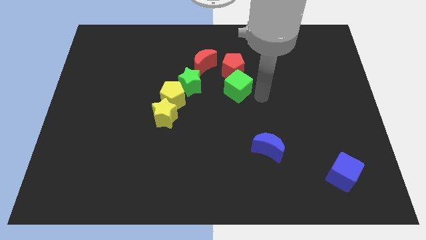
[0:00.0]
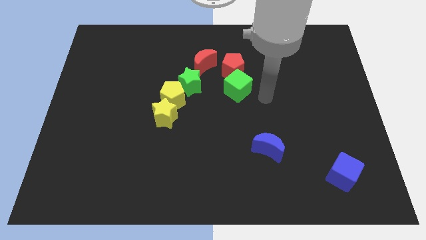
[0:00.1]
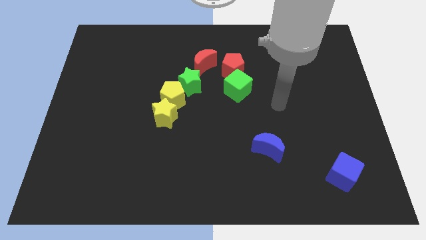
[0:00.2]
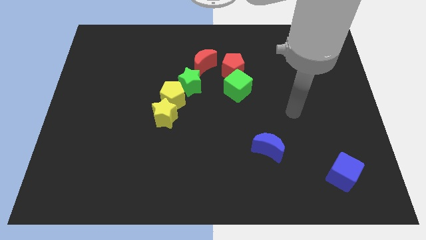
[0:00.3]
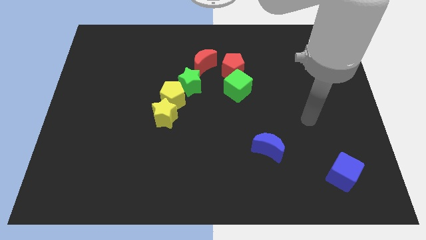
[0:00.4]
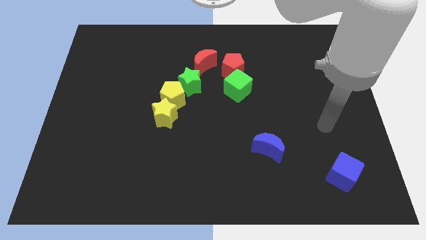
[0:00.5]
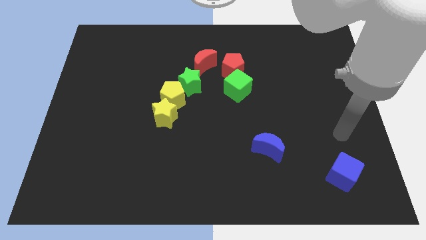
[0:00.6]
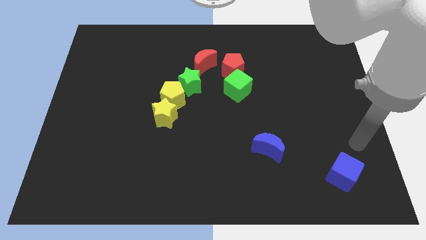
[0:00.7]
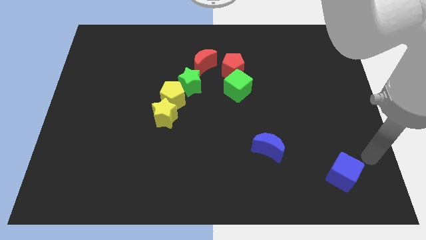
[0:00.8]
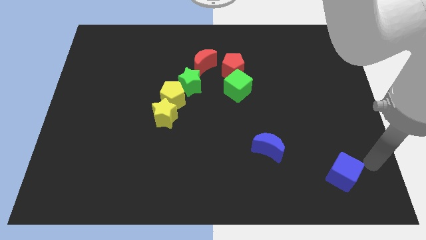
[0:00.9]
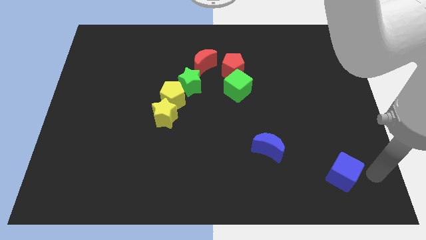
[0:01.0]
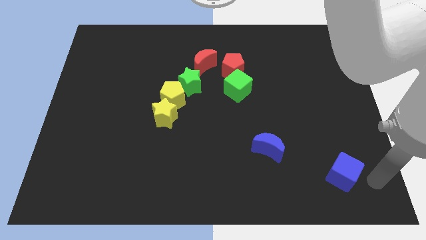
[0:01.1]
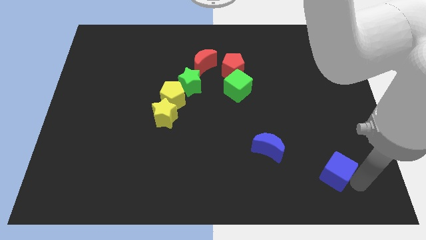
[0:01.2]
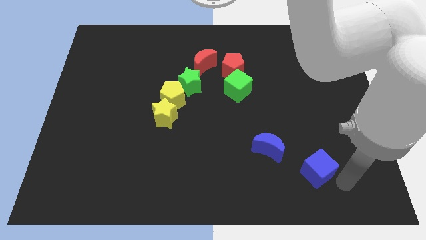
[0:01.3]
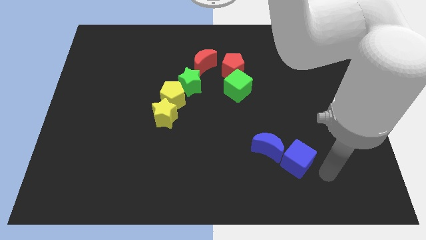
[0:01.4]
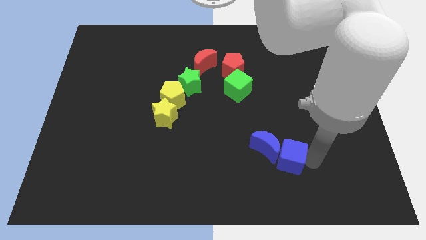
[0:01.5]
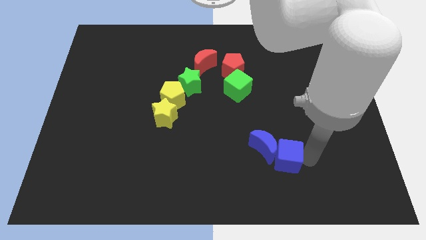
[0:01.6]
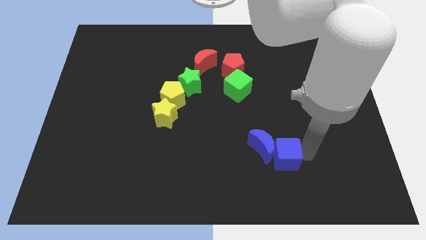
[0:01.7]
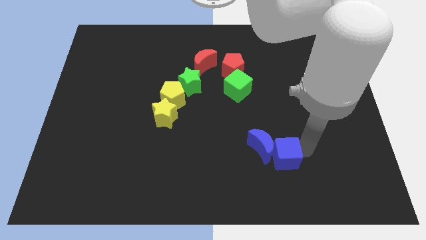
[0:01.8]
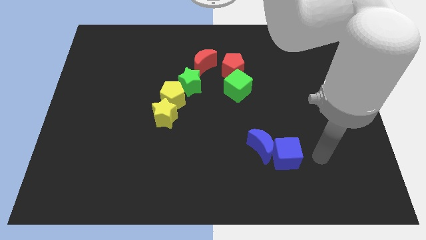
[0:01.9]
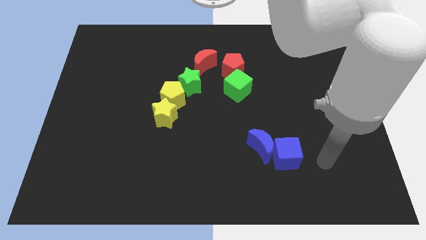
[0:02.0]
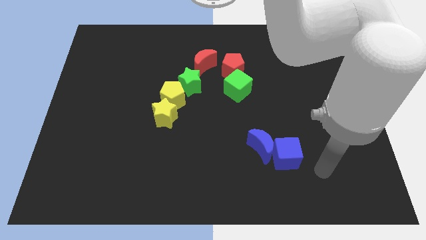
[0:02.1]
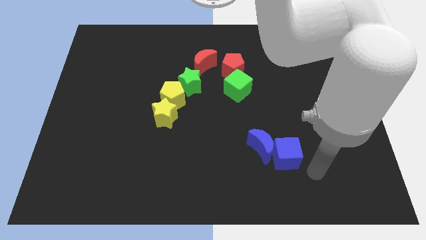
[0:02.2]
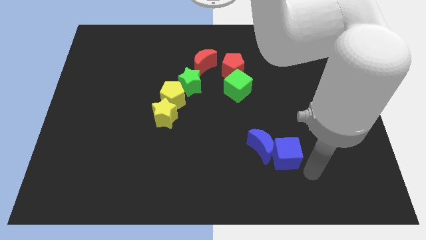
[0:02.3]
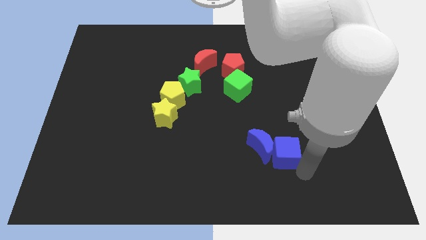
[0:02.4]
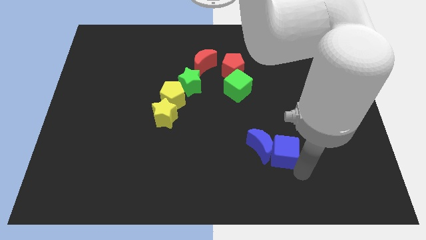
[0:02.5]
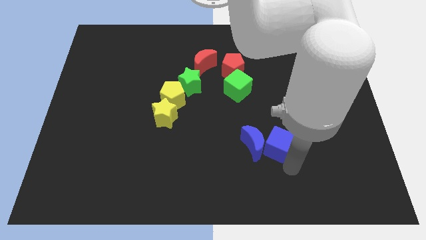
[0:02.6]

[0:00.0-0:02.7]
push the blue cube into the blue crescent

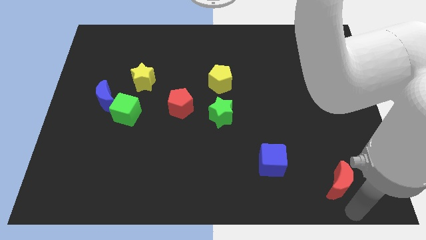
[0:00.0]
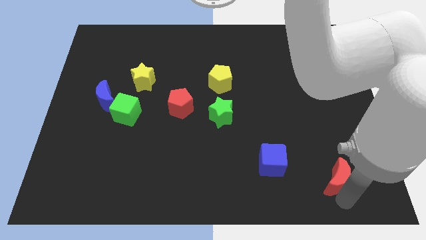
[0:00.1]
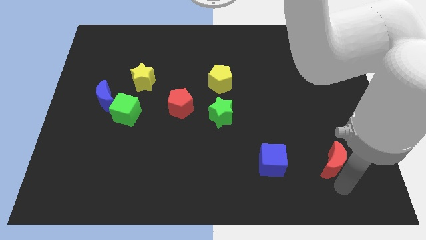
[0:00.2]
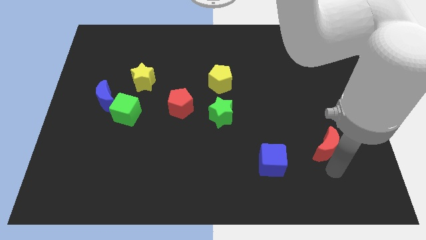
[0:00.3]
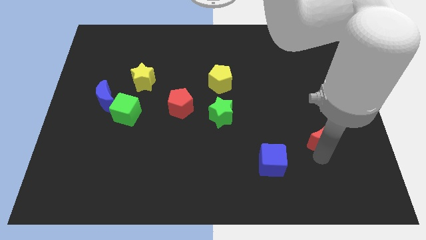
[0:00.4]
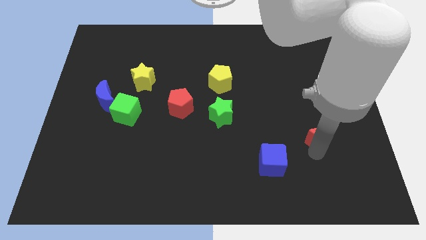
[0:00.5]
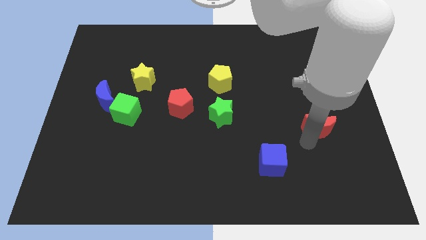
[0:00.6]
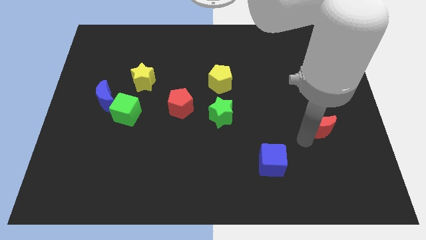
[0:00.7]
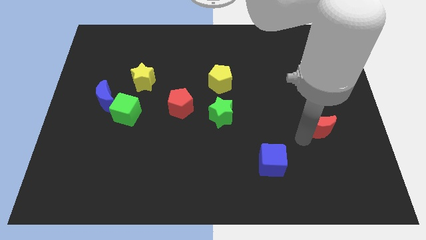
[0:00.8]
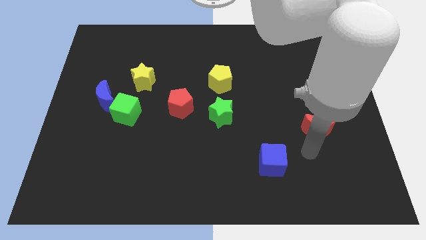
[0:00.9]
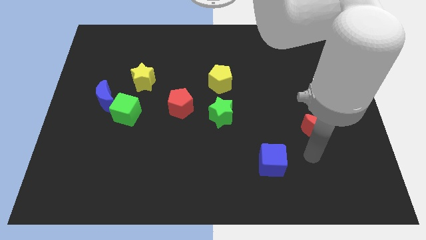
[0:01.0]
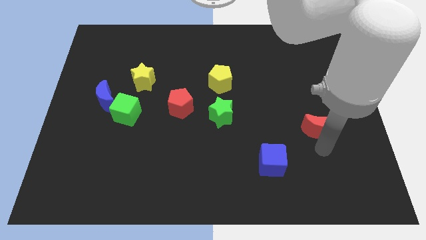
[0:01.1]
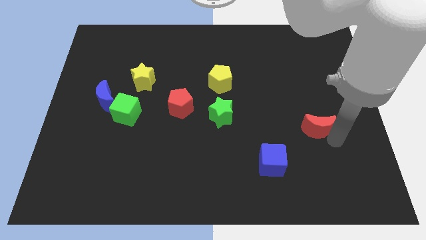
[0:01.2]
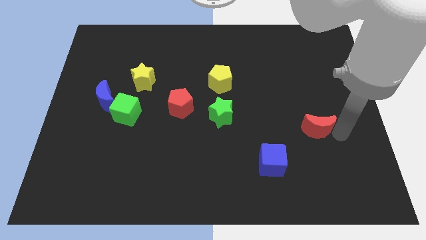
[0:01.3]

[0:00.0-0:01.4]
slide red moon to the top right of blue cube

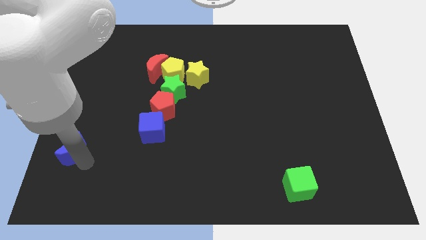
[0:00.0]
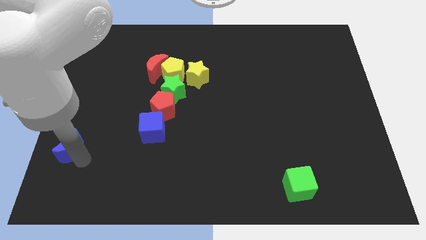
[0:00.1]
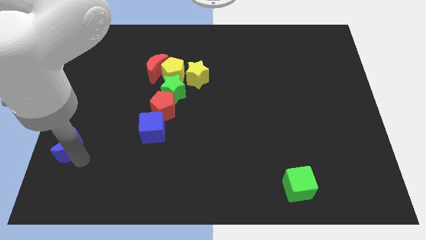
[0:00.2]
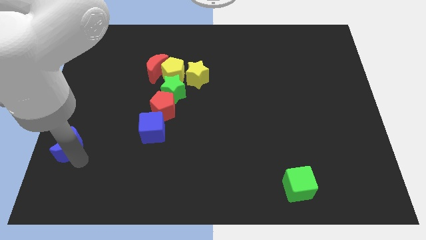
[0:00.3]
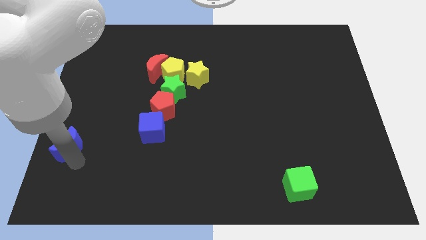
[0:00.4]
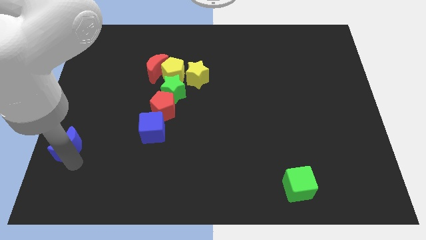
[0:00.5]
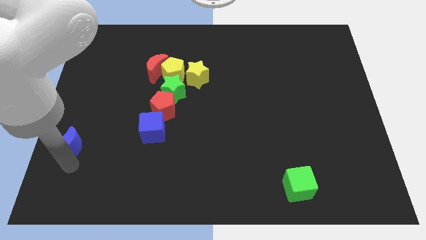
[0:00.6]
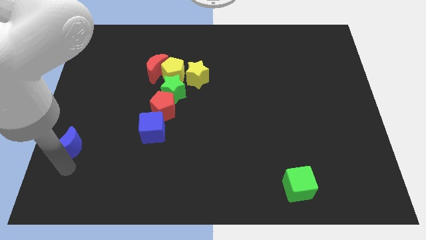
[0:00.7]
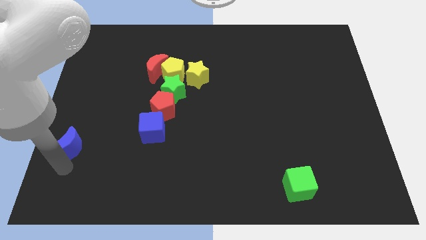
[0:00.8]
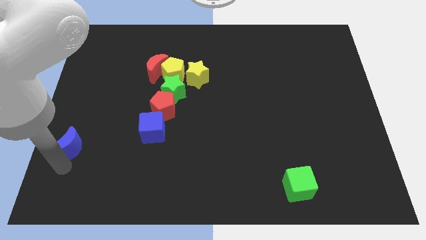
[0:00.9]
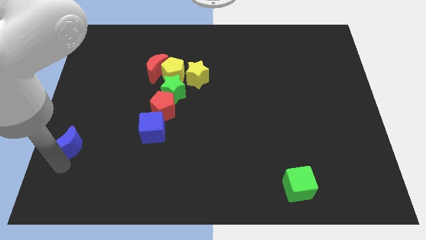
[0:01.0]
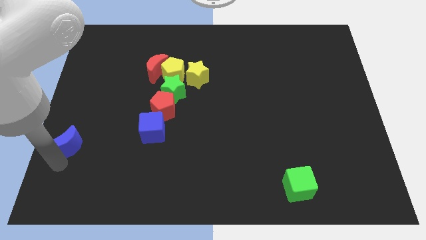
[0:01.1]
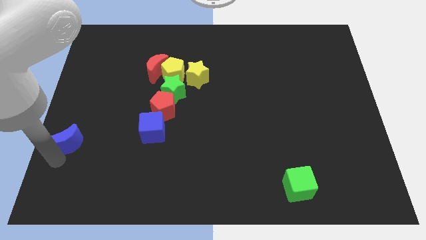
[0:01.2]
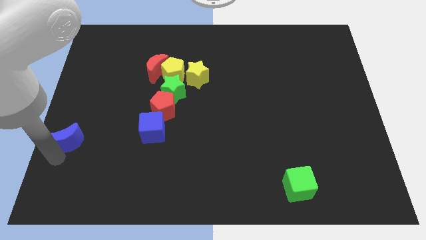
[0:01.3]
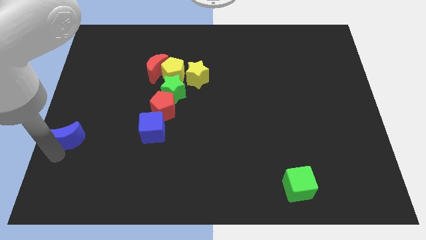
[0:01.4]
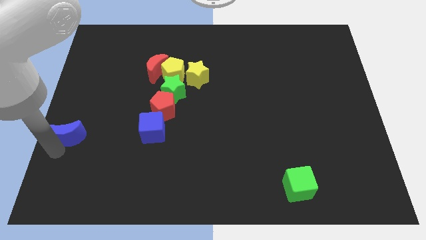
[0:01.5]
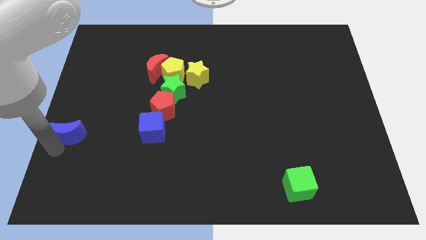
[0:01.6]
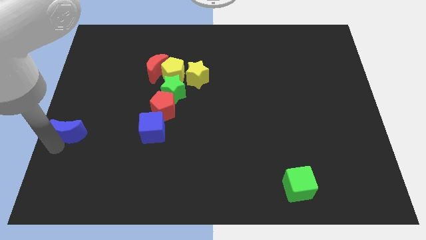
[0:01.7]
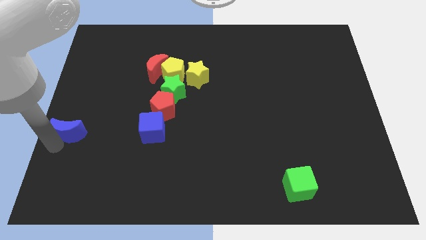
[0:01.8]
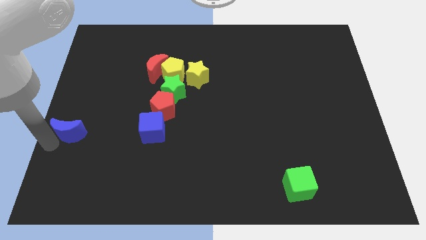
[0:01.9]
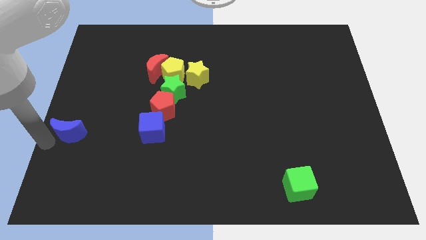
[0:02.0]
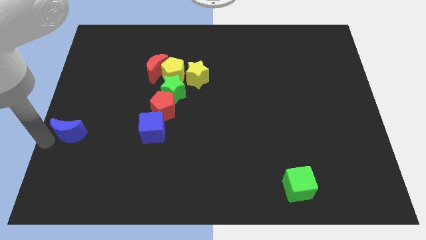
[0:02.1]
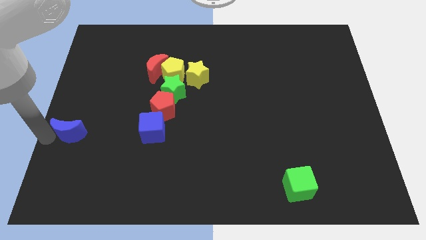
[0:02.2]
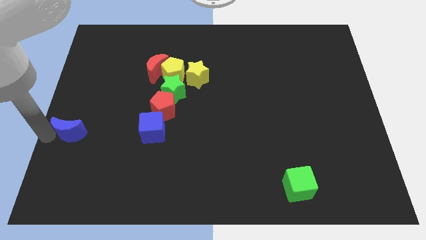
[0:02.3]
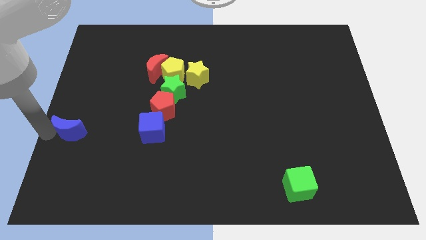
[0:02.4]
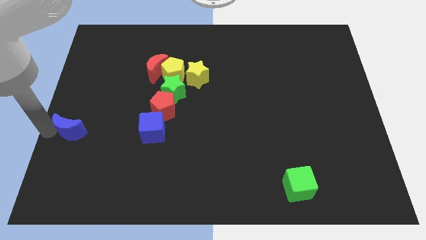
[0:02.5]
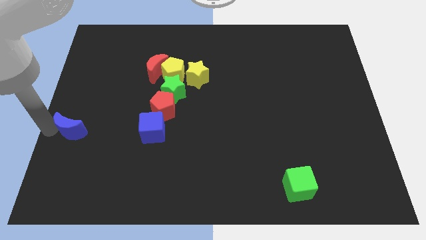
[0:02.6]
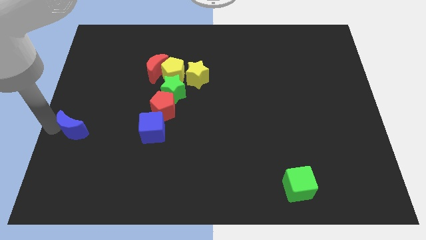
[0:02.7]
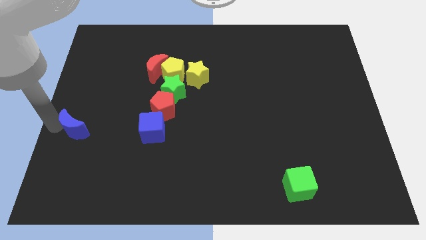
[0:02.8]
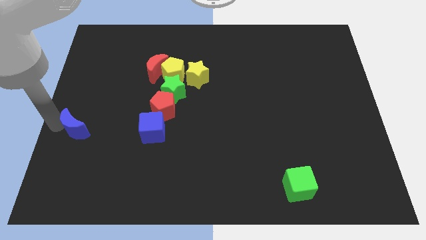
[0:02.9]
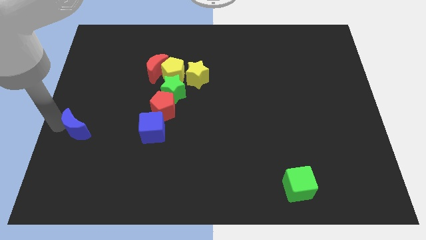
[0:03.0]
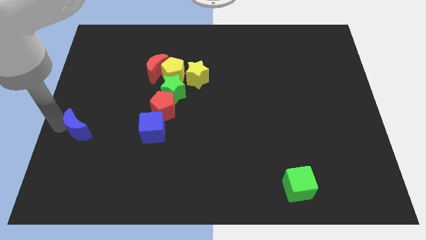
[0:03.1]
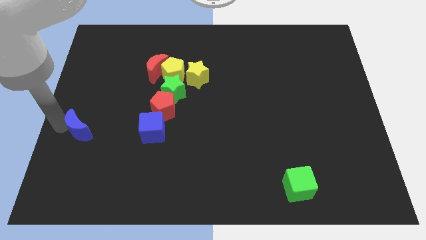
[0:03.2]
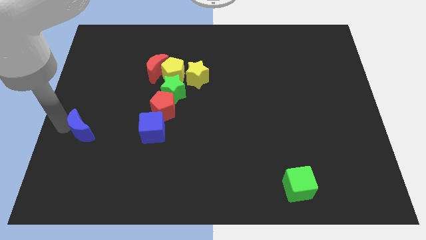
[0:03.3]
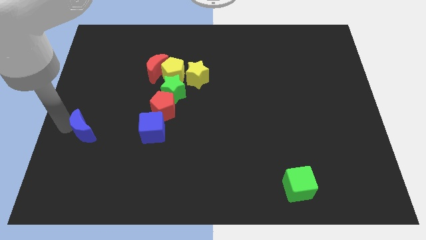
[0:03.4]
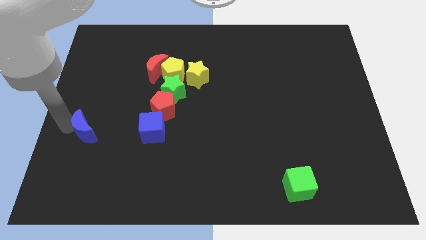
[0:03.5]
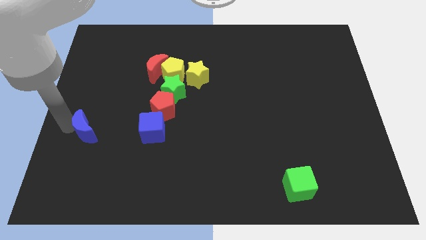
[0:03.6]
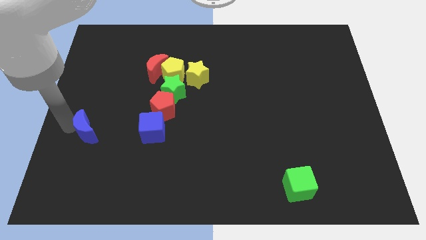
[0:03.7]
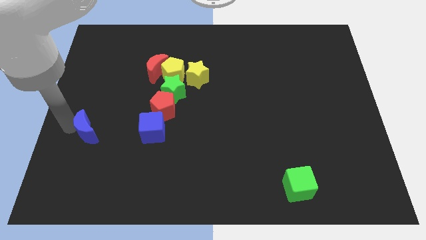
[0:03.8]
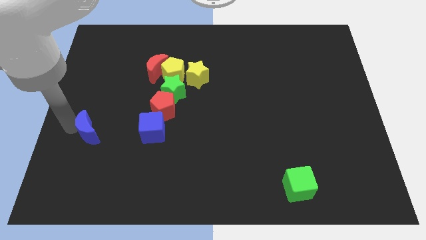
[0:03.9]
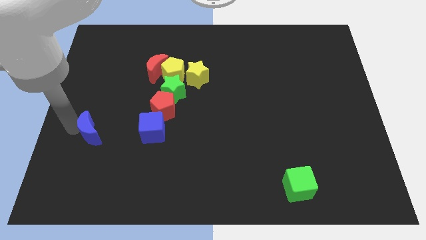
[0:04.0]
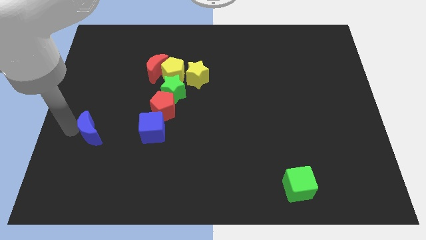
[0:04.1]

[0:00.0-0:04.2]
push the blue crescent parallel to the blue cube

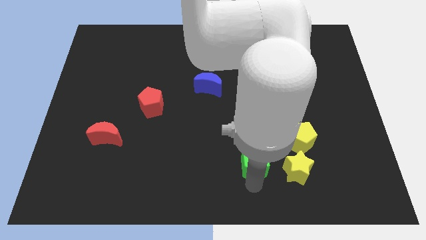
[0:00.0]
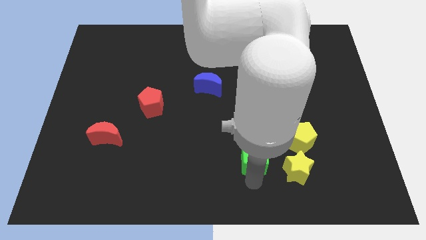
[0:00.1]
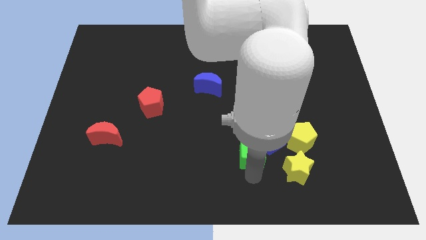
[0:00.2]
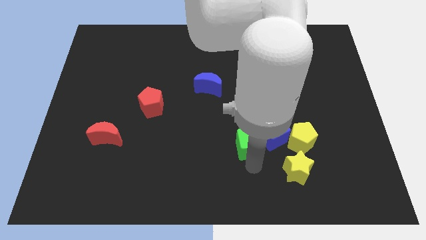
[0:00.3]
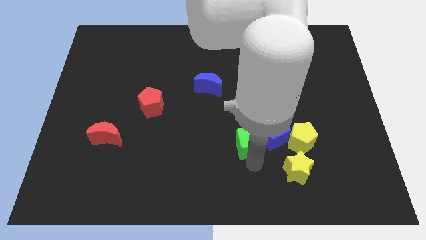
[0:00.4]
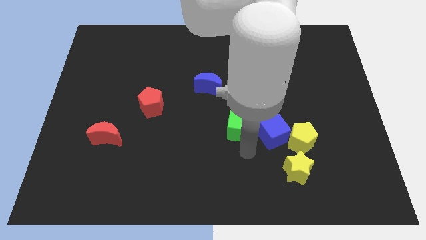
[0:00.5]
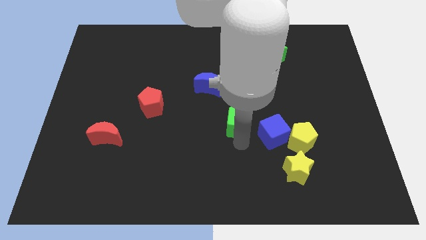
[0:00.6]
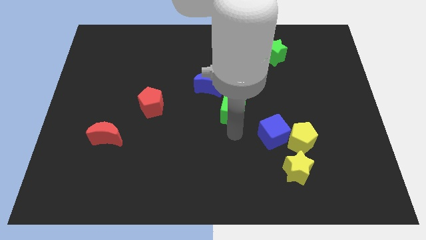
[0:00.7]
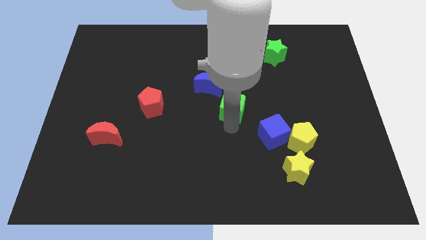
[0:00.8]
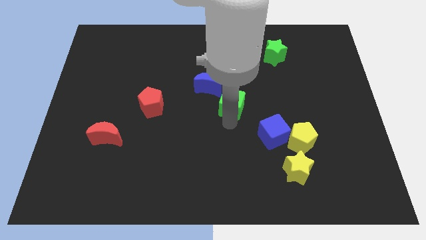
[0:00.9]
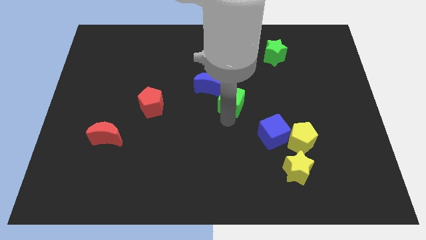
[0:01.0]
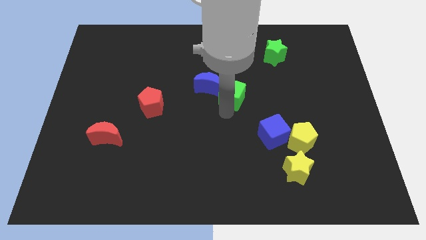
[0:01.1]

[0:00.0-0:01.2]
move the green cube towards the center
